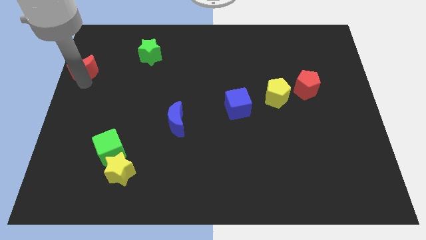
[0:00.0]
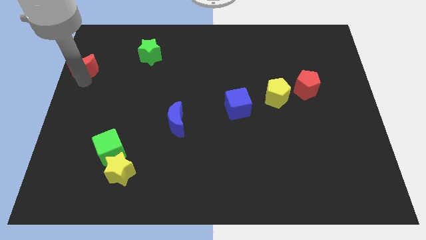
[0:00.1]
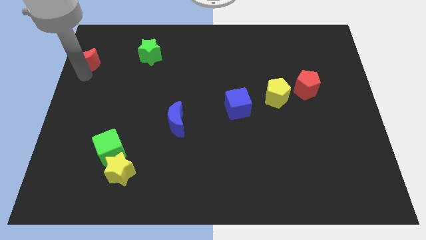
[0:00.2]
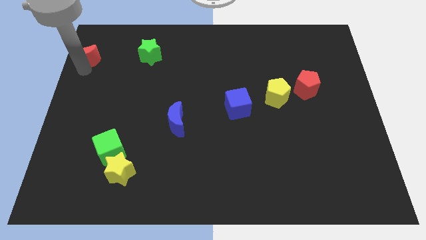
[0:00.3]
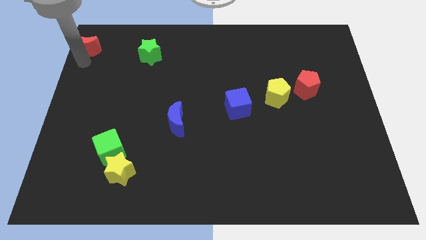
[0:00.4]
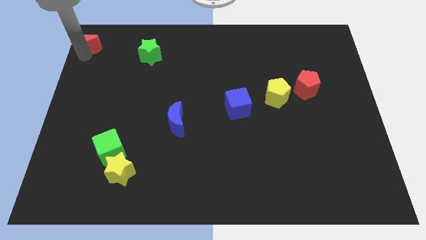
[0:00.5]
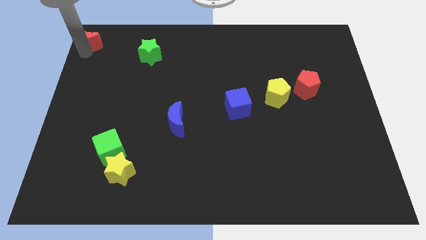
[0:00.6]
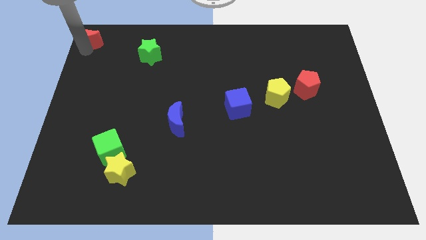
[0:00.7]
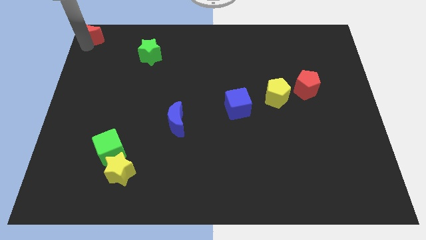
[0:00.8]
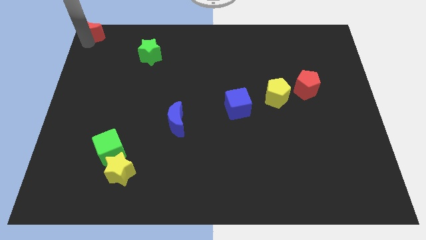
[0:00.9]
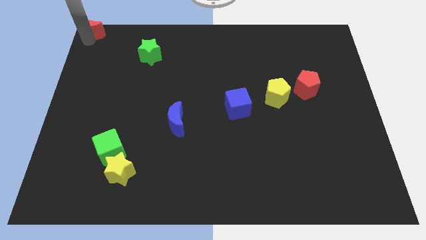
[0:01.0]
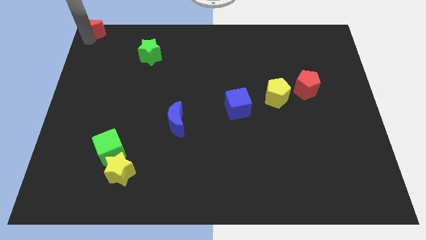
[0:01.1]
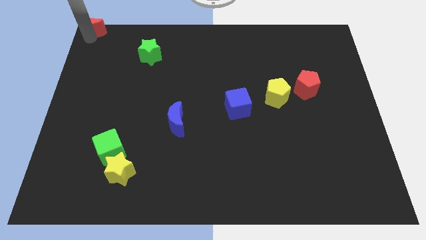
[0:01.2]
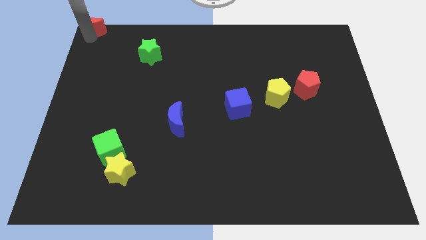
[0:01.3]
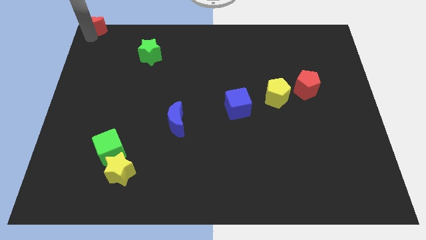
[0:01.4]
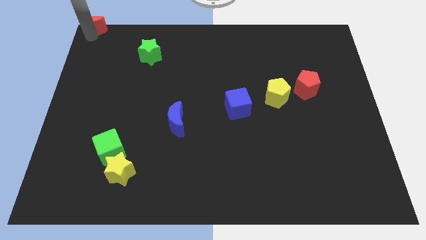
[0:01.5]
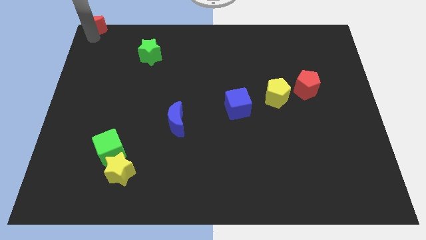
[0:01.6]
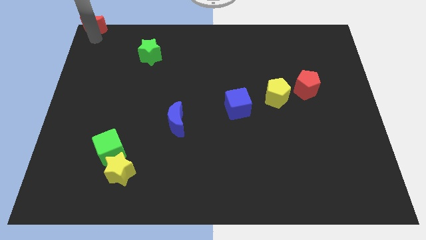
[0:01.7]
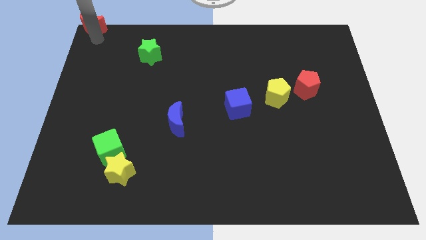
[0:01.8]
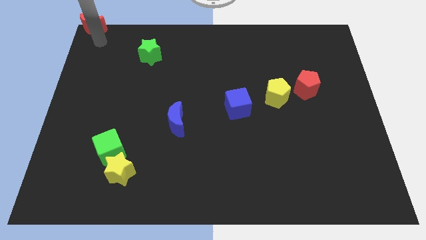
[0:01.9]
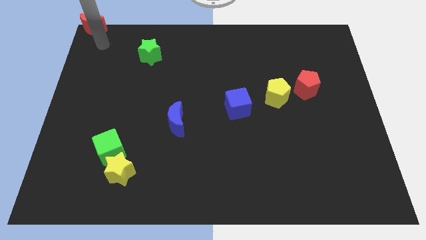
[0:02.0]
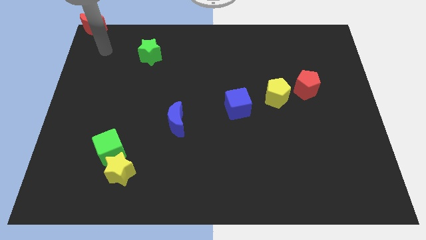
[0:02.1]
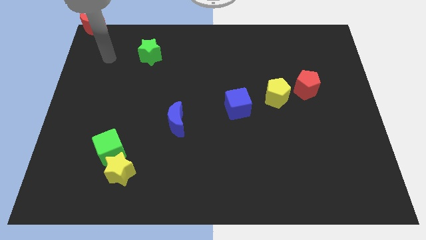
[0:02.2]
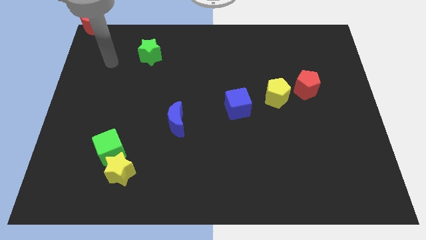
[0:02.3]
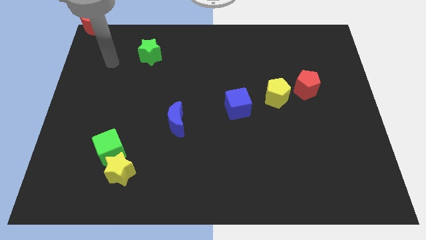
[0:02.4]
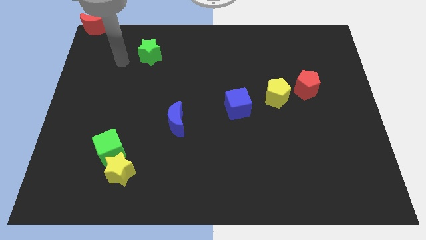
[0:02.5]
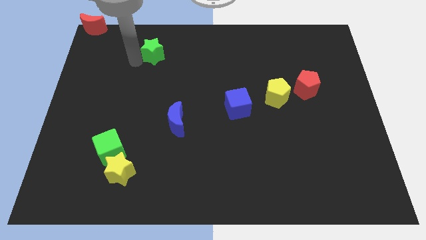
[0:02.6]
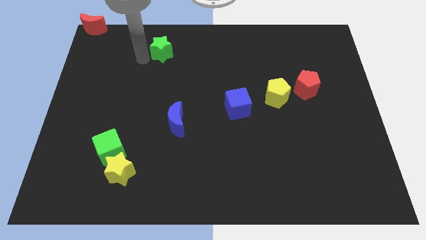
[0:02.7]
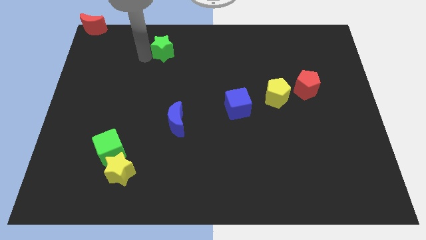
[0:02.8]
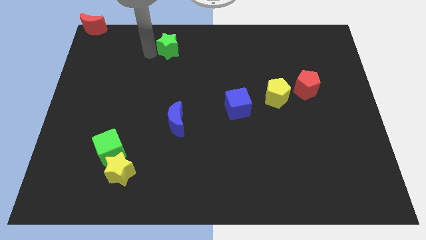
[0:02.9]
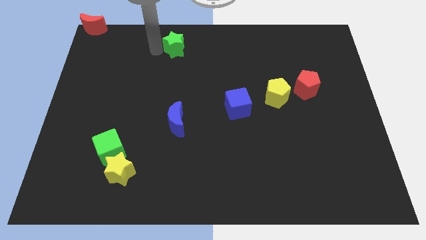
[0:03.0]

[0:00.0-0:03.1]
push green star above blue crescent

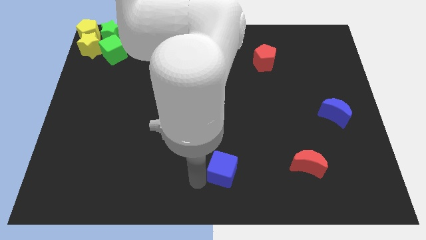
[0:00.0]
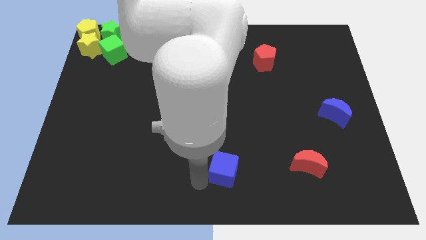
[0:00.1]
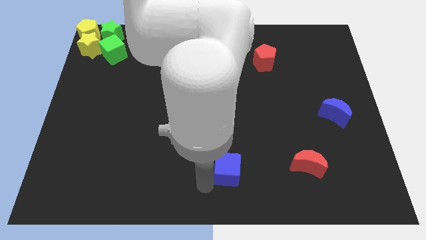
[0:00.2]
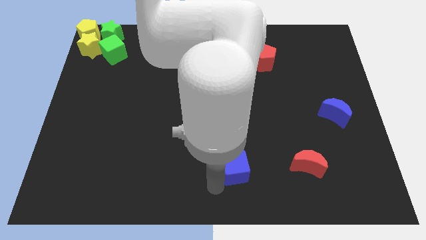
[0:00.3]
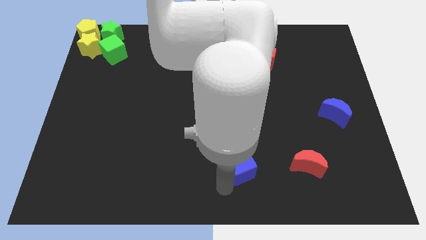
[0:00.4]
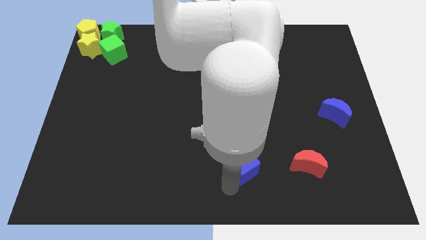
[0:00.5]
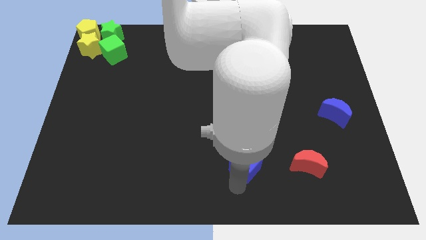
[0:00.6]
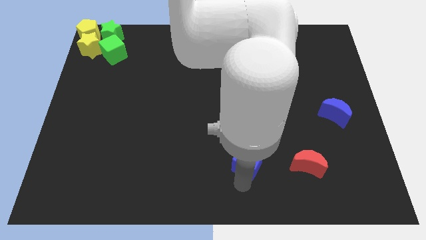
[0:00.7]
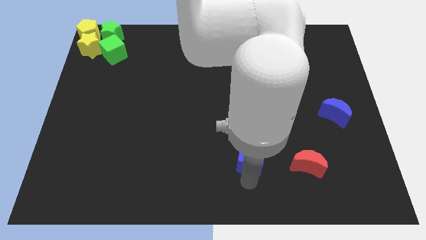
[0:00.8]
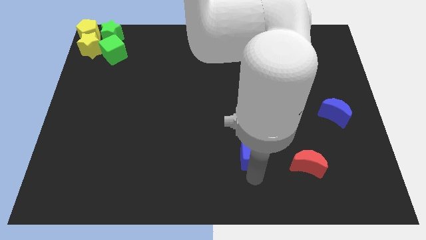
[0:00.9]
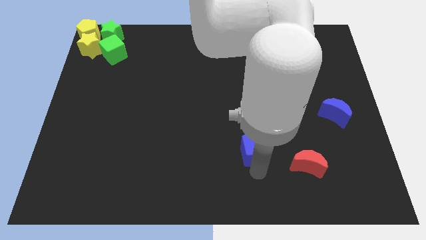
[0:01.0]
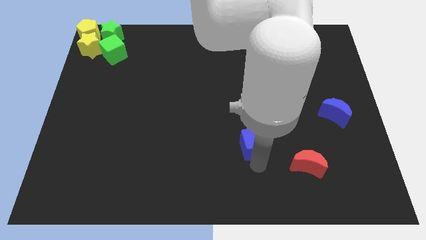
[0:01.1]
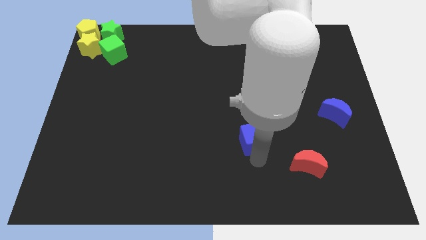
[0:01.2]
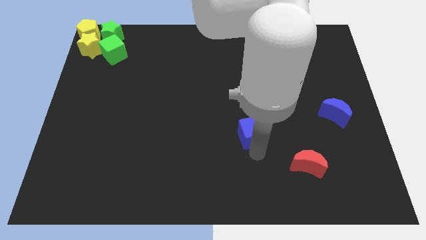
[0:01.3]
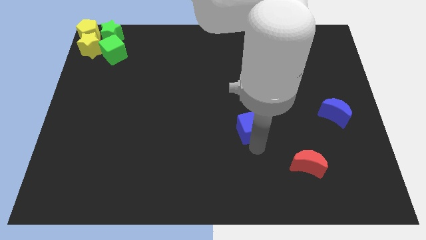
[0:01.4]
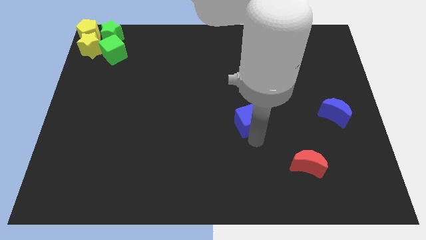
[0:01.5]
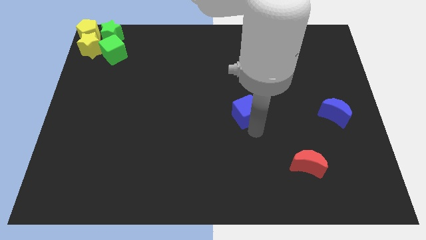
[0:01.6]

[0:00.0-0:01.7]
push the blue cube towards the center of the board

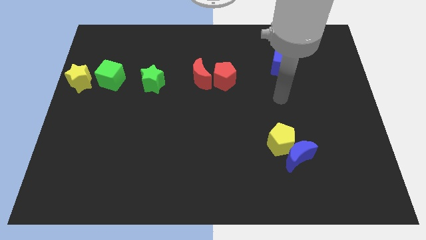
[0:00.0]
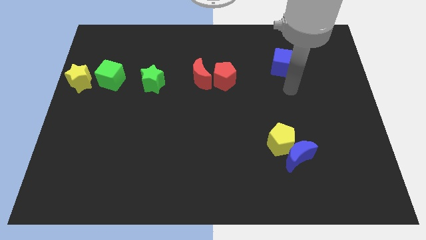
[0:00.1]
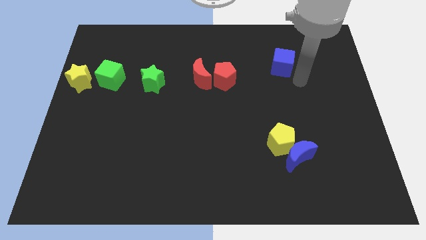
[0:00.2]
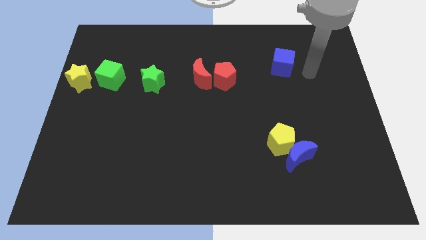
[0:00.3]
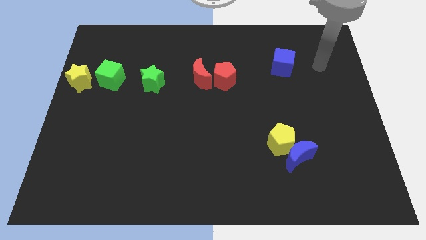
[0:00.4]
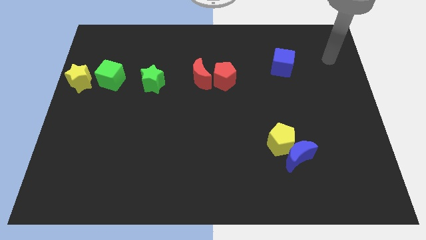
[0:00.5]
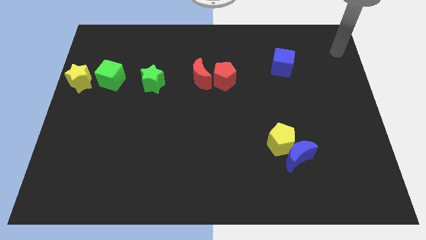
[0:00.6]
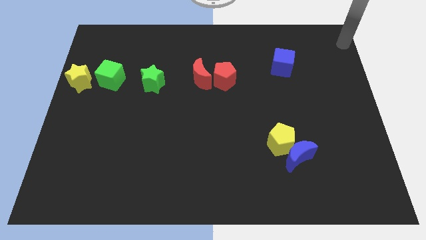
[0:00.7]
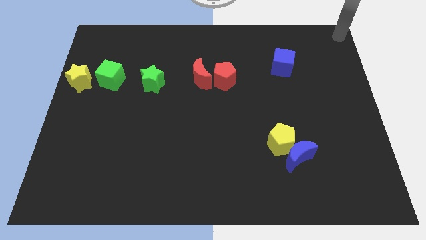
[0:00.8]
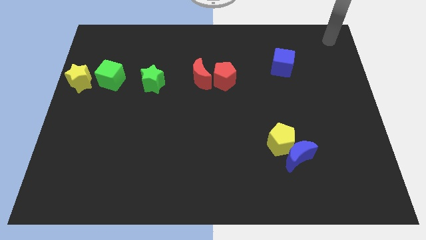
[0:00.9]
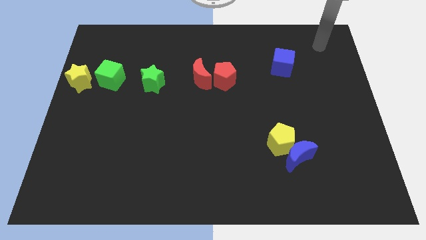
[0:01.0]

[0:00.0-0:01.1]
slide your hand to the top right

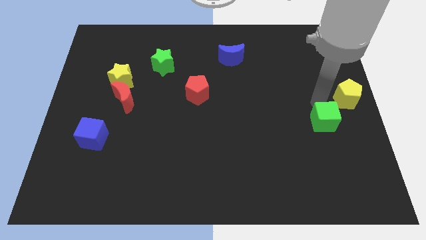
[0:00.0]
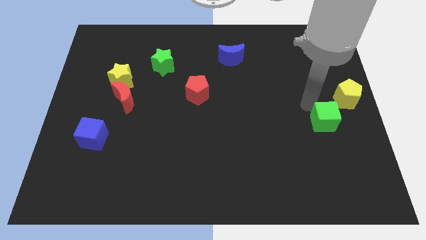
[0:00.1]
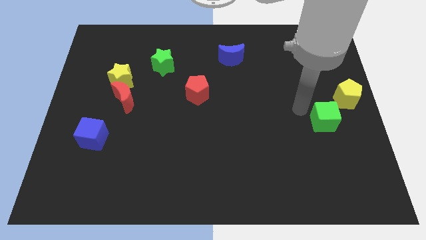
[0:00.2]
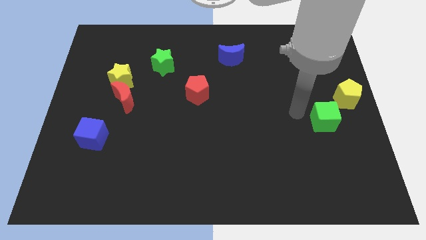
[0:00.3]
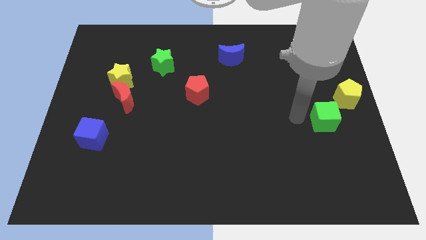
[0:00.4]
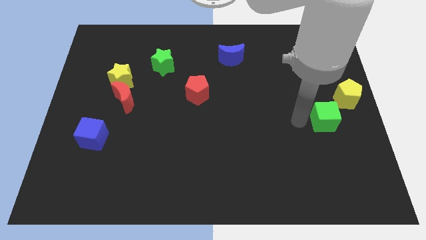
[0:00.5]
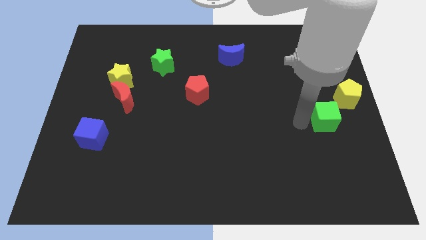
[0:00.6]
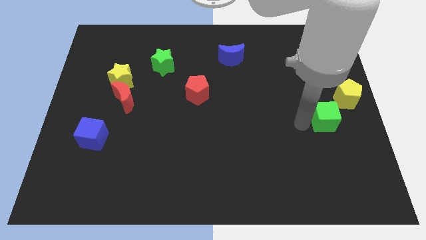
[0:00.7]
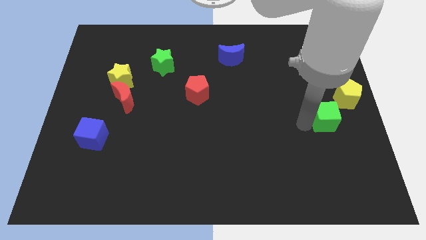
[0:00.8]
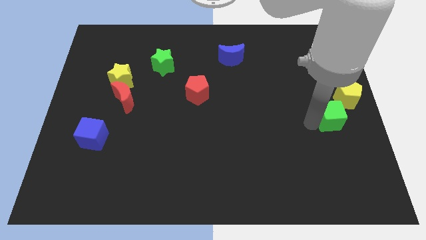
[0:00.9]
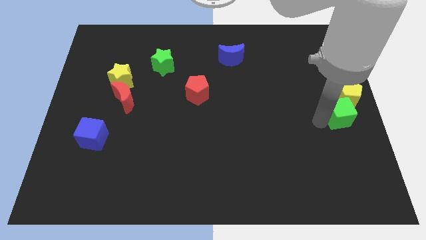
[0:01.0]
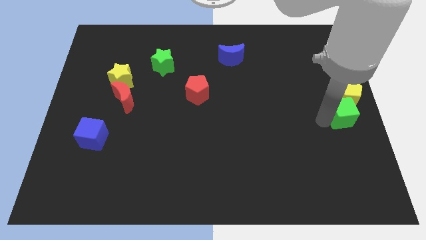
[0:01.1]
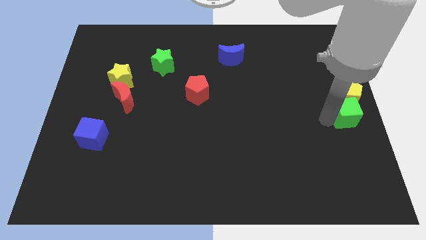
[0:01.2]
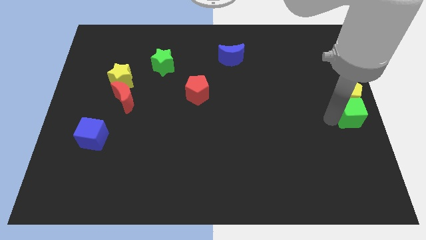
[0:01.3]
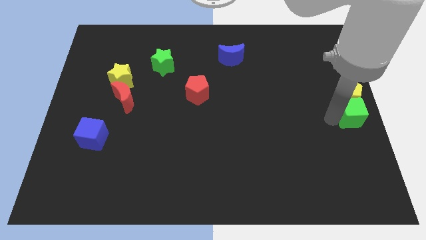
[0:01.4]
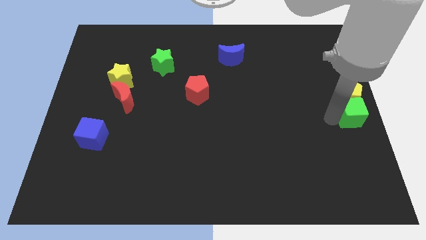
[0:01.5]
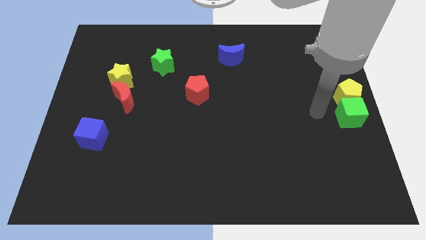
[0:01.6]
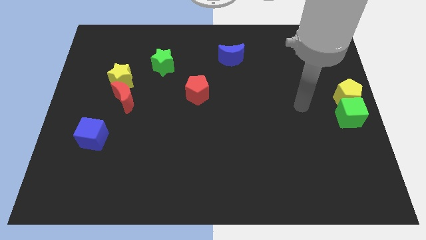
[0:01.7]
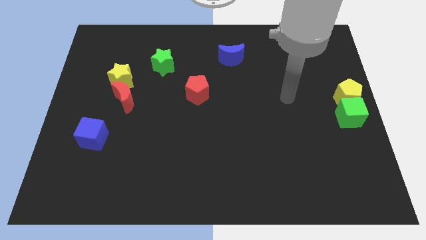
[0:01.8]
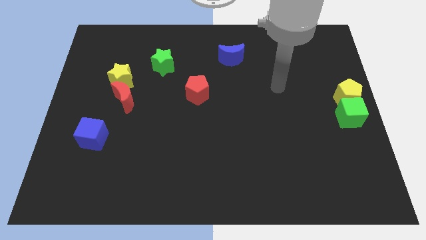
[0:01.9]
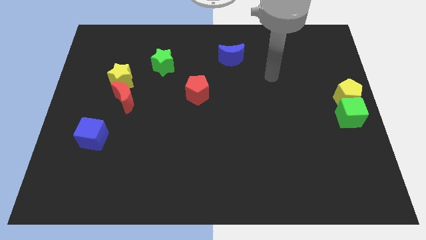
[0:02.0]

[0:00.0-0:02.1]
place the green cube below the yellow pentagon

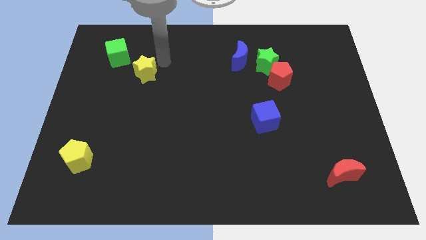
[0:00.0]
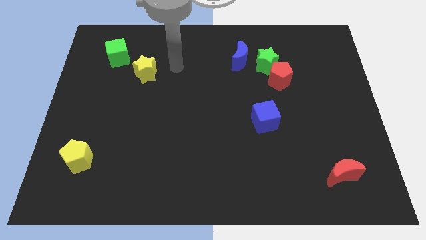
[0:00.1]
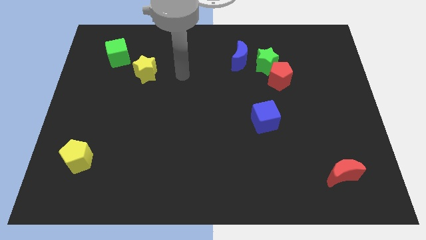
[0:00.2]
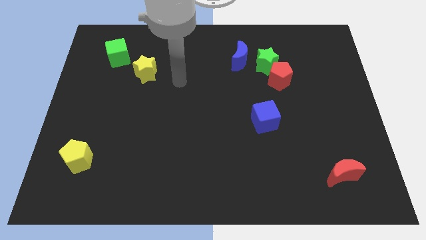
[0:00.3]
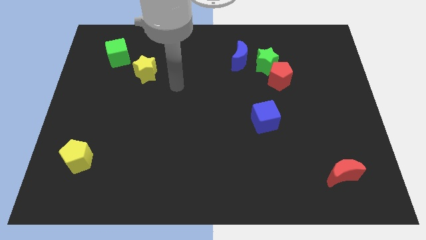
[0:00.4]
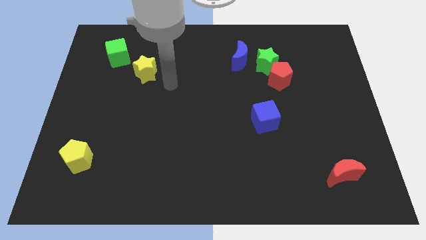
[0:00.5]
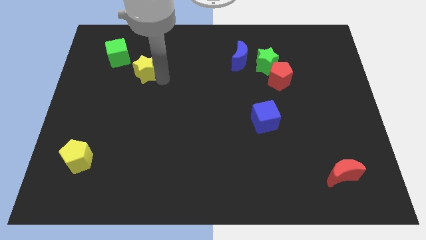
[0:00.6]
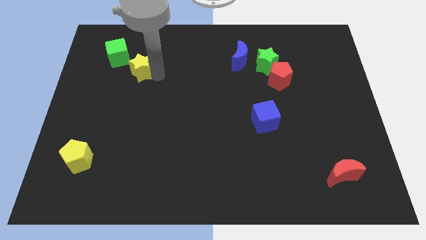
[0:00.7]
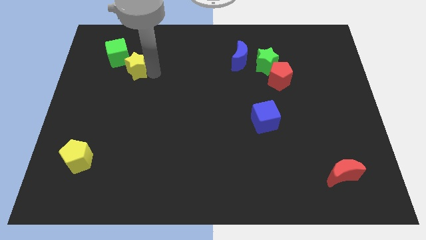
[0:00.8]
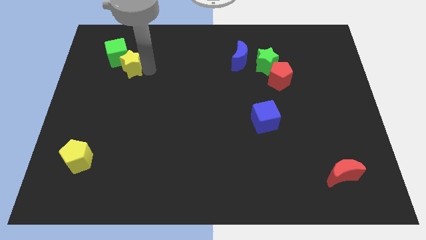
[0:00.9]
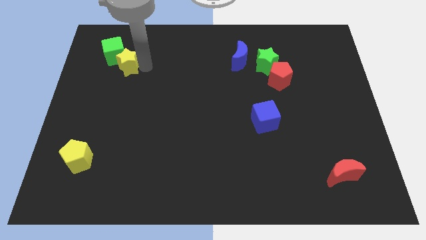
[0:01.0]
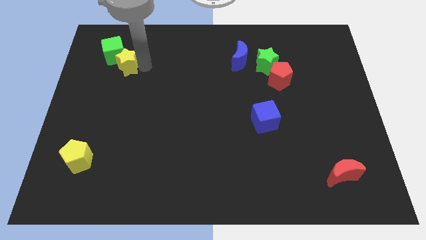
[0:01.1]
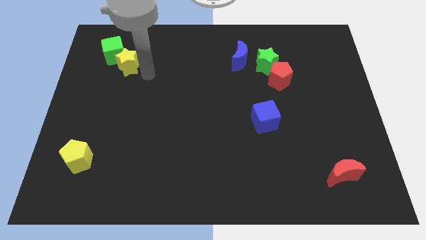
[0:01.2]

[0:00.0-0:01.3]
move the yellow star into the green cube
